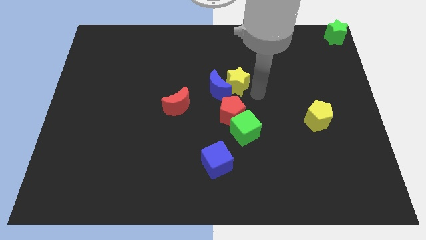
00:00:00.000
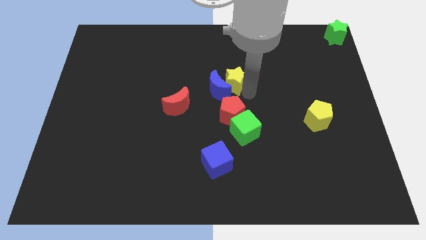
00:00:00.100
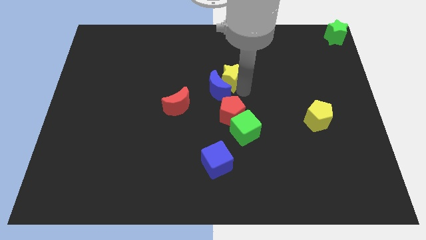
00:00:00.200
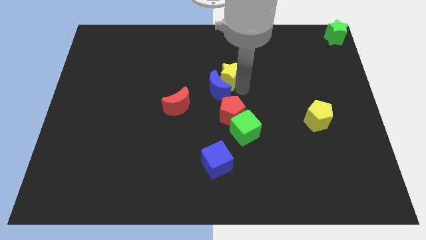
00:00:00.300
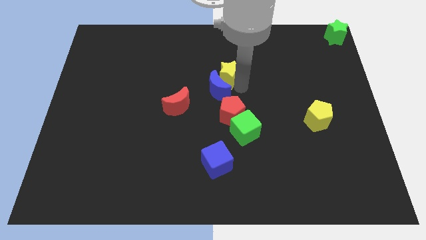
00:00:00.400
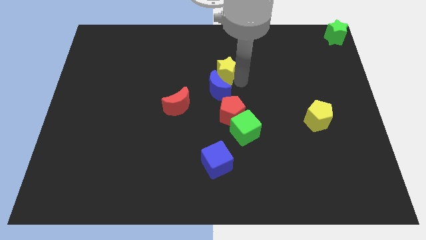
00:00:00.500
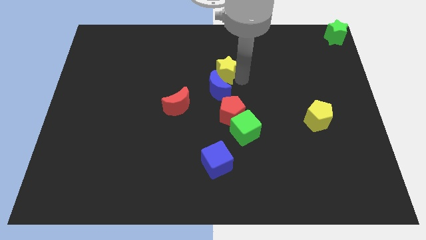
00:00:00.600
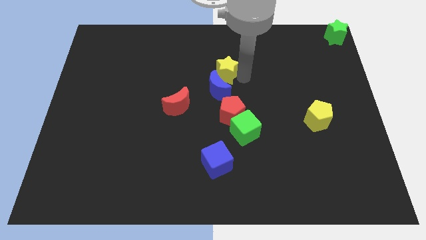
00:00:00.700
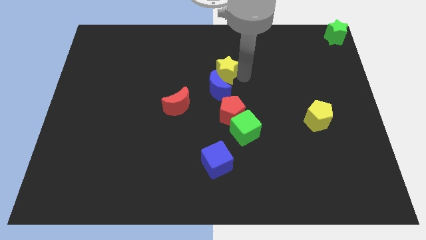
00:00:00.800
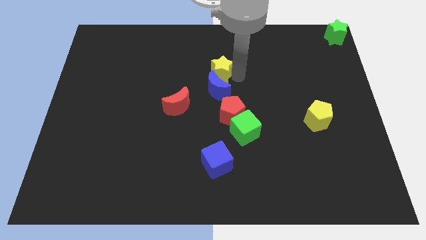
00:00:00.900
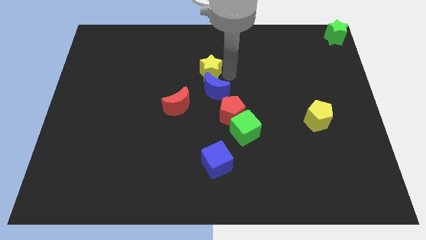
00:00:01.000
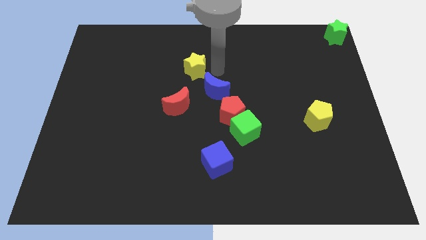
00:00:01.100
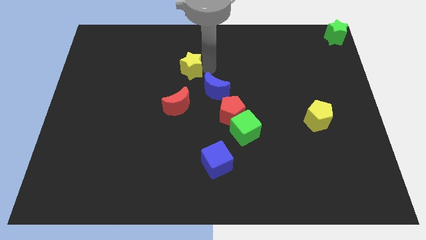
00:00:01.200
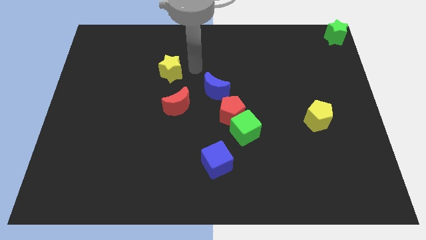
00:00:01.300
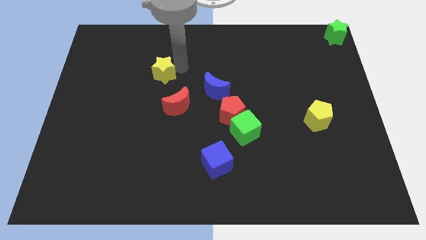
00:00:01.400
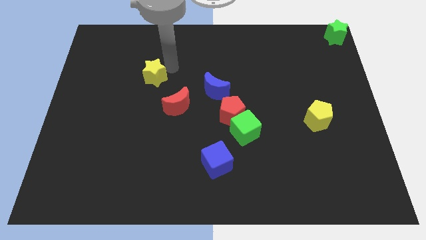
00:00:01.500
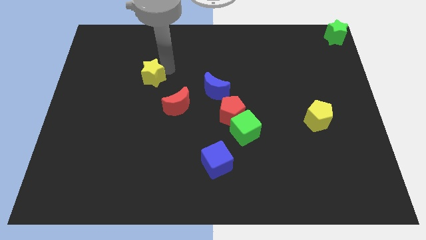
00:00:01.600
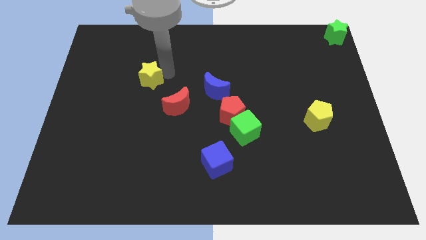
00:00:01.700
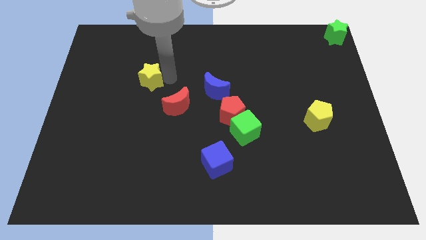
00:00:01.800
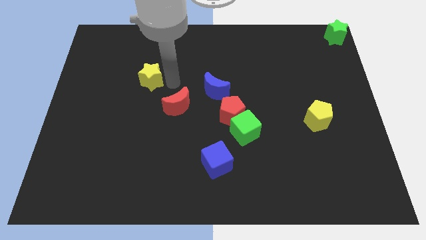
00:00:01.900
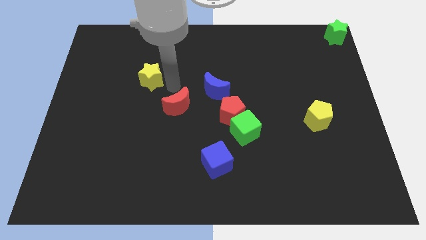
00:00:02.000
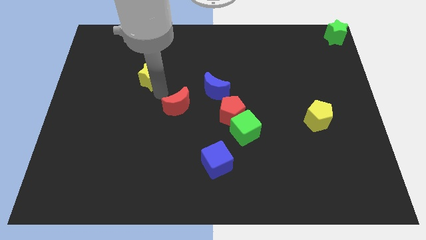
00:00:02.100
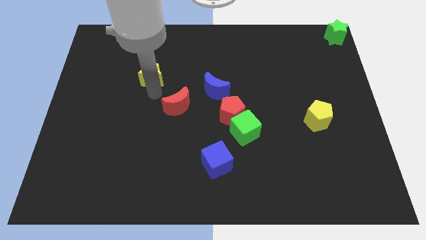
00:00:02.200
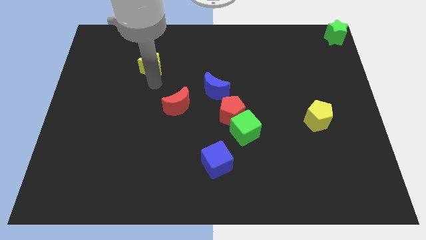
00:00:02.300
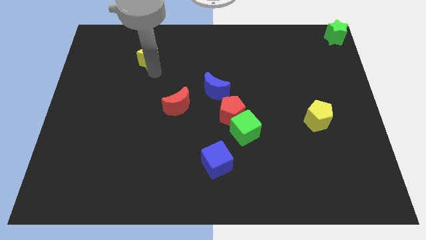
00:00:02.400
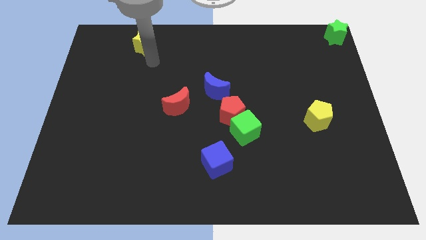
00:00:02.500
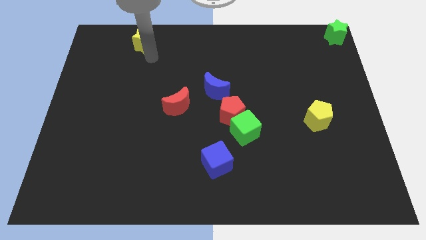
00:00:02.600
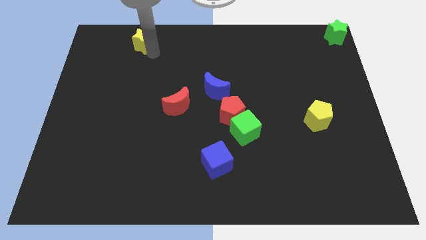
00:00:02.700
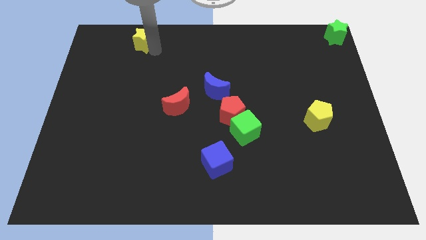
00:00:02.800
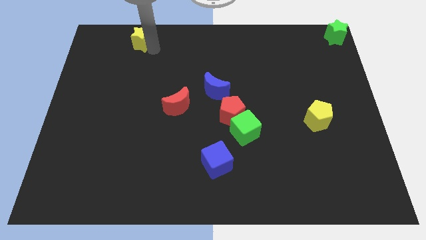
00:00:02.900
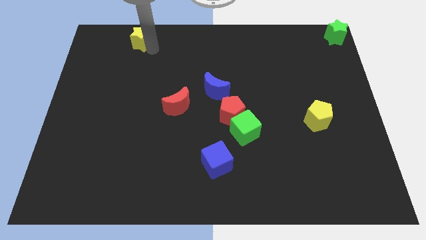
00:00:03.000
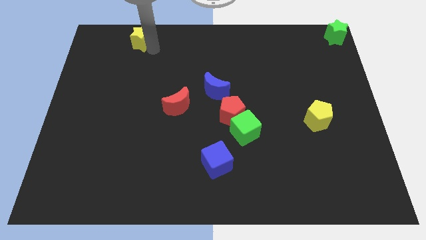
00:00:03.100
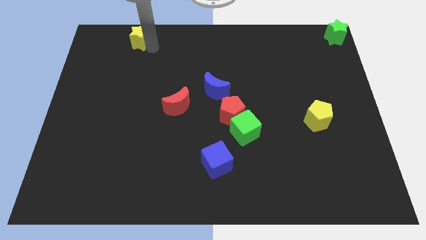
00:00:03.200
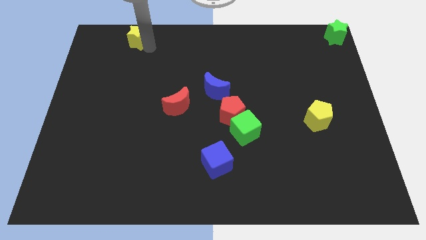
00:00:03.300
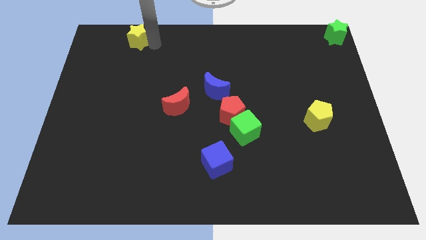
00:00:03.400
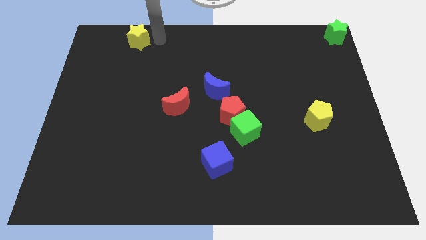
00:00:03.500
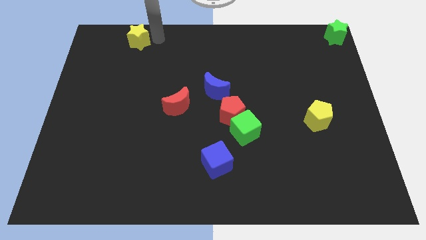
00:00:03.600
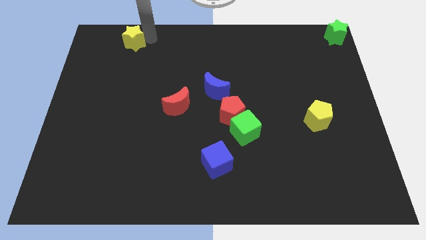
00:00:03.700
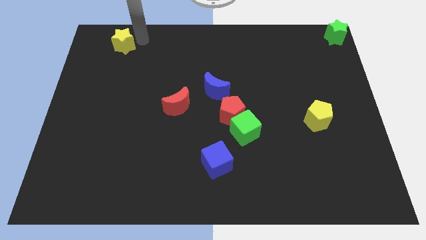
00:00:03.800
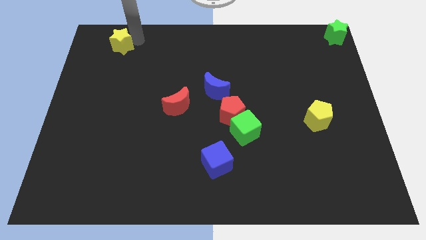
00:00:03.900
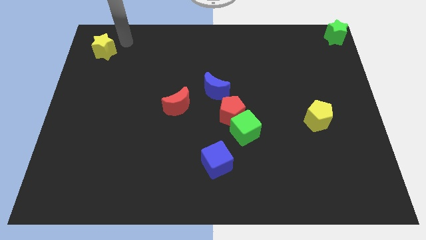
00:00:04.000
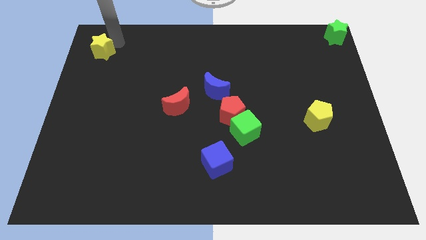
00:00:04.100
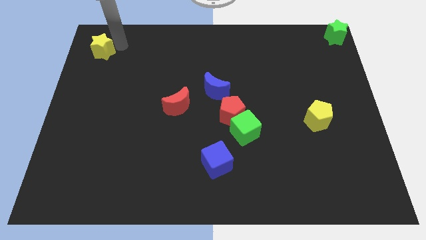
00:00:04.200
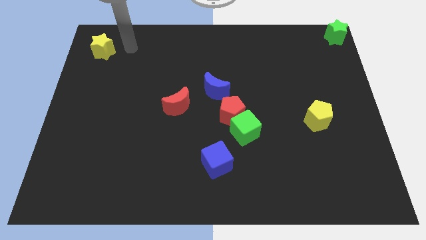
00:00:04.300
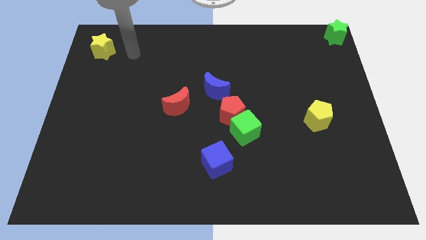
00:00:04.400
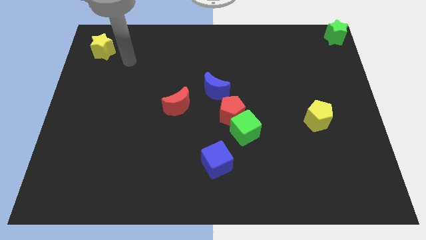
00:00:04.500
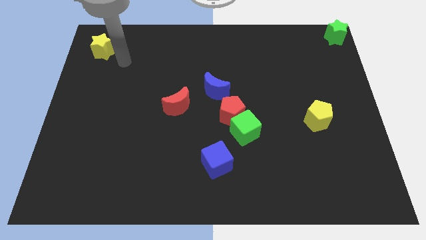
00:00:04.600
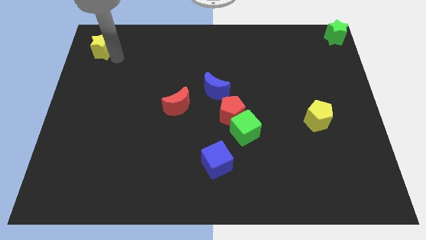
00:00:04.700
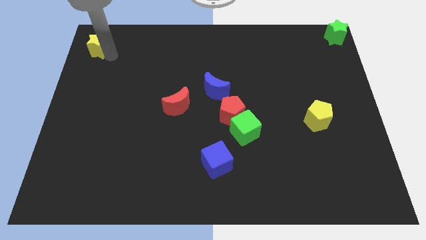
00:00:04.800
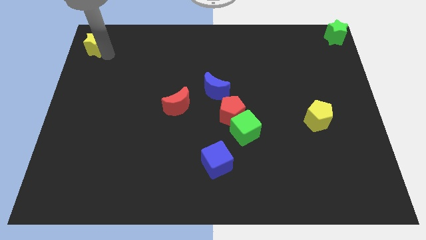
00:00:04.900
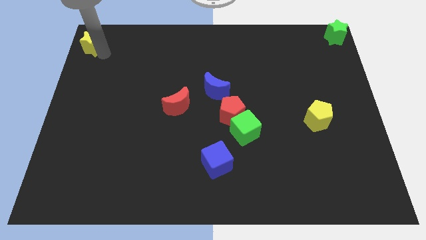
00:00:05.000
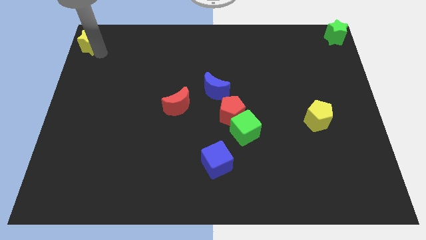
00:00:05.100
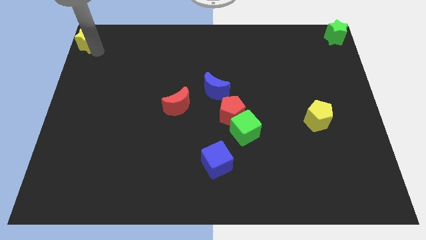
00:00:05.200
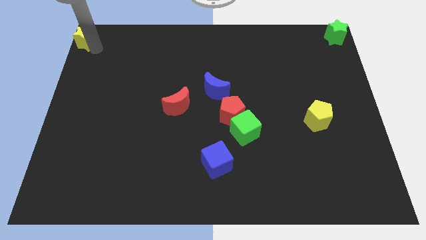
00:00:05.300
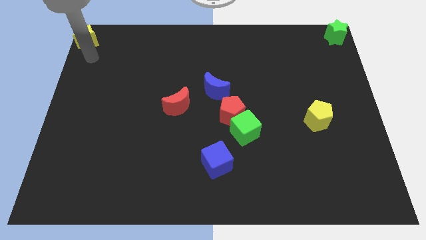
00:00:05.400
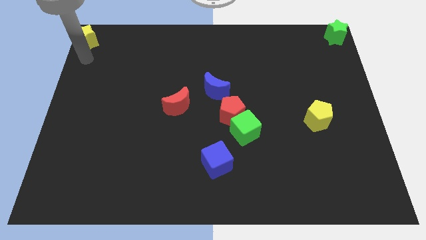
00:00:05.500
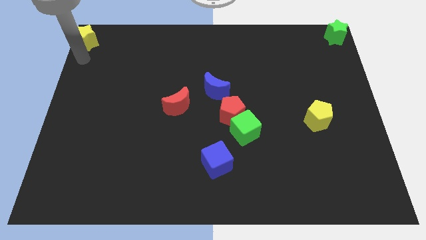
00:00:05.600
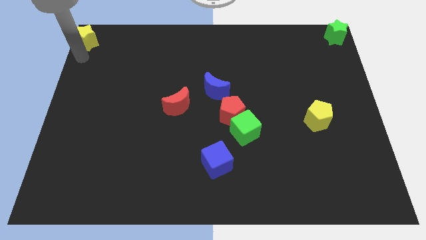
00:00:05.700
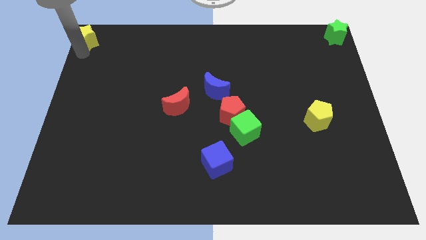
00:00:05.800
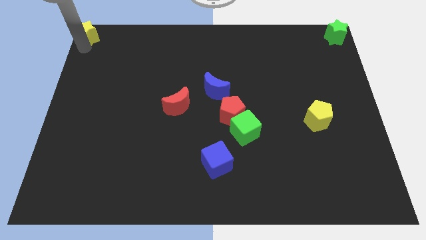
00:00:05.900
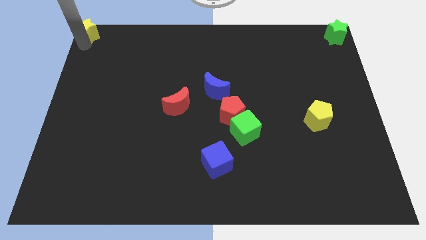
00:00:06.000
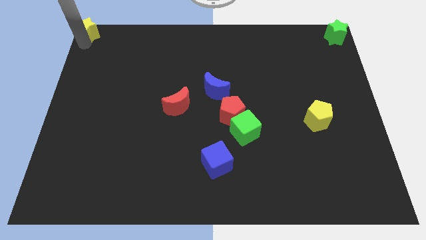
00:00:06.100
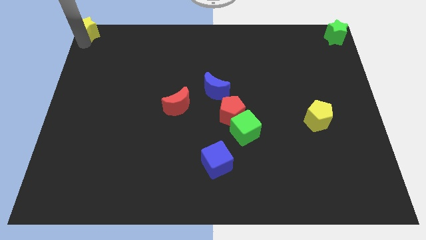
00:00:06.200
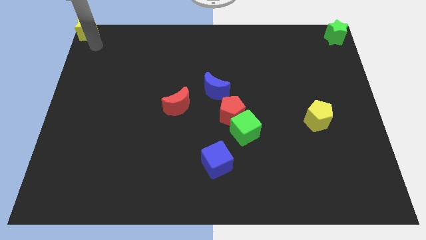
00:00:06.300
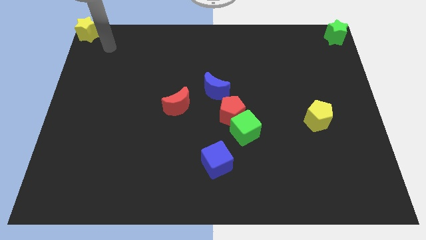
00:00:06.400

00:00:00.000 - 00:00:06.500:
drag the yellow star to the top left corner of the table

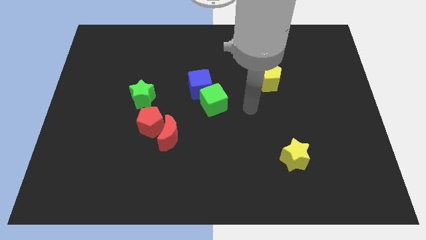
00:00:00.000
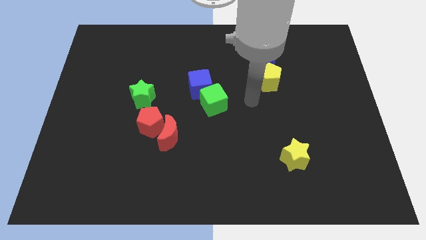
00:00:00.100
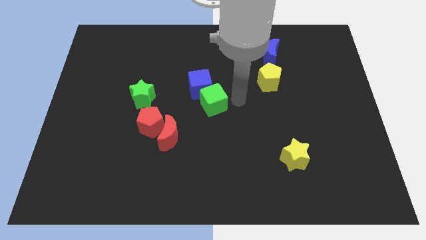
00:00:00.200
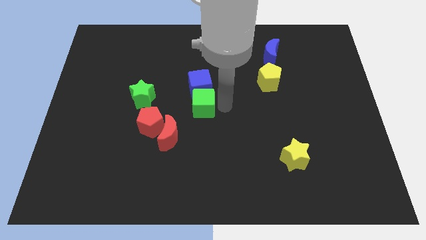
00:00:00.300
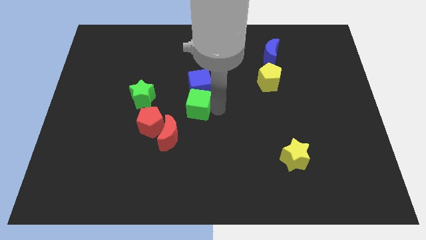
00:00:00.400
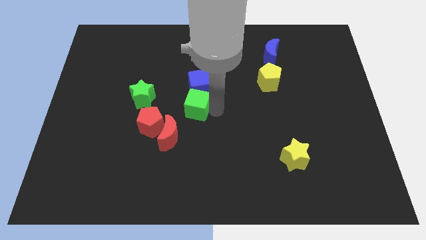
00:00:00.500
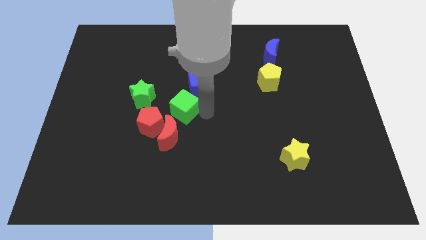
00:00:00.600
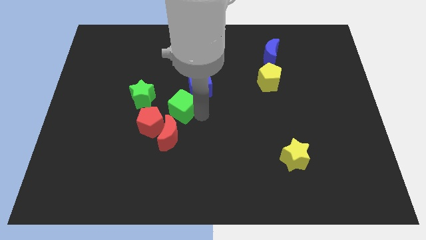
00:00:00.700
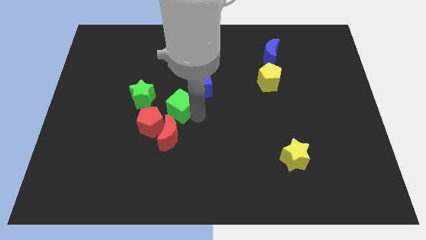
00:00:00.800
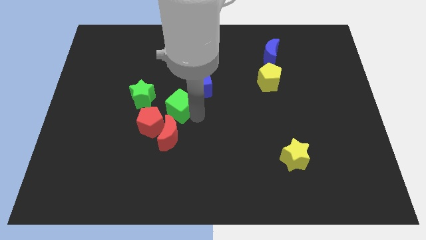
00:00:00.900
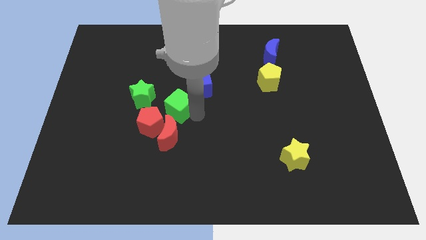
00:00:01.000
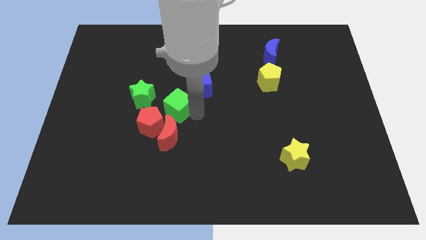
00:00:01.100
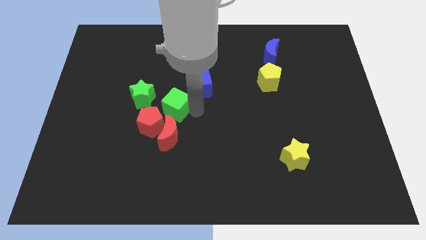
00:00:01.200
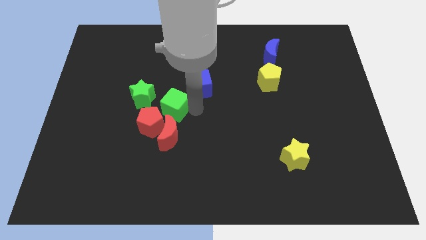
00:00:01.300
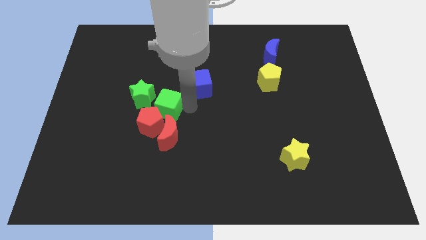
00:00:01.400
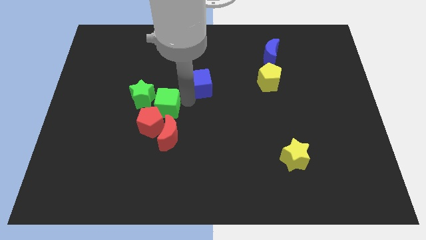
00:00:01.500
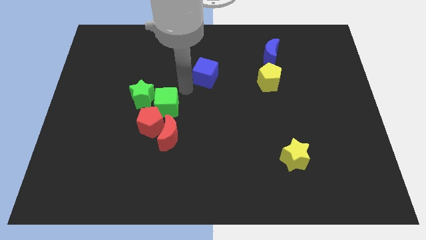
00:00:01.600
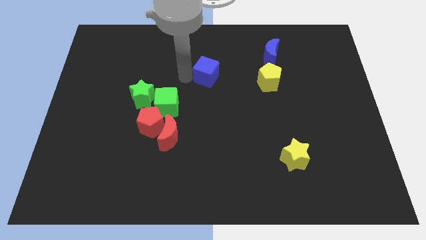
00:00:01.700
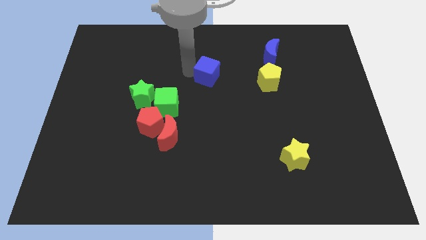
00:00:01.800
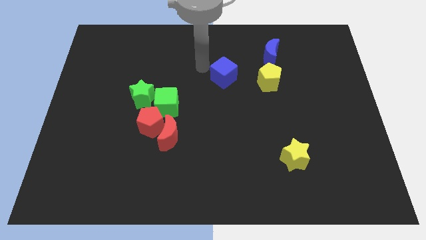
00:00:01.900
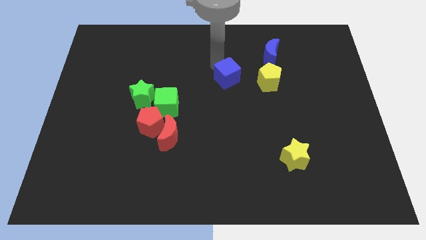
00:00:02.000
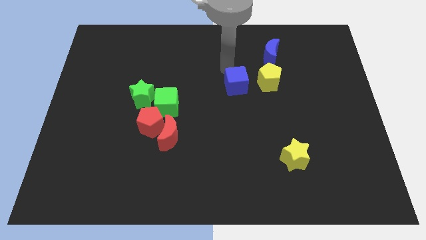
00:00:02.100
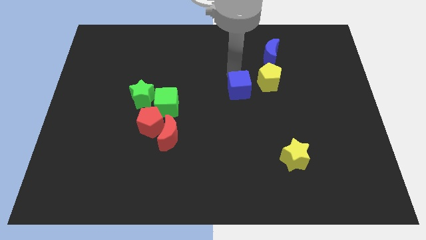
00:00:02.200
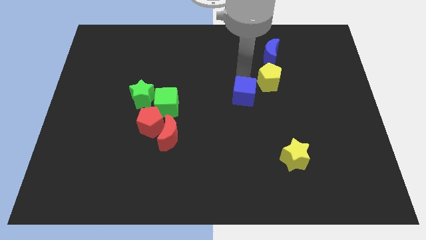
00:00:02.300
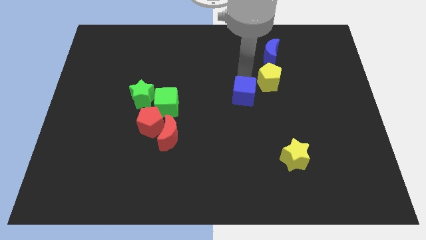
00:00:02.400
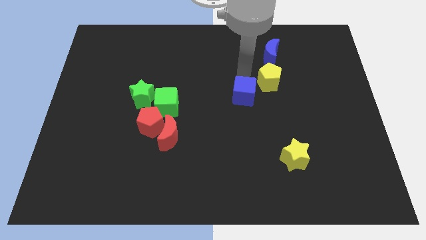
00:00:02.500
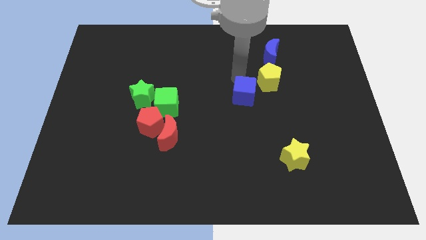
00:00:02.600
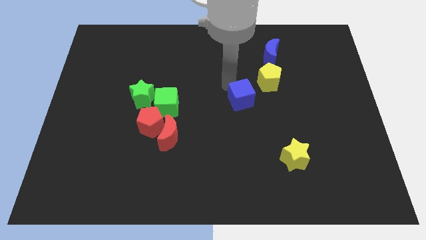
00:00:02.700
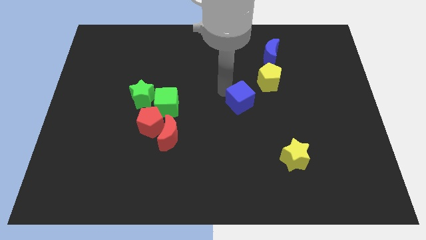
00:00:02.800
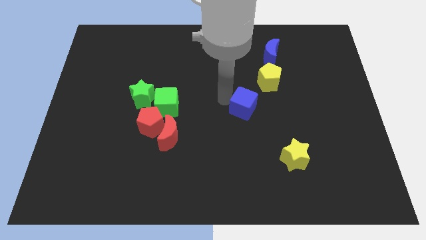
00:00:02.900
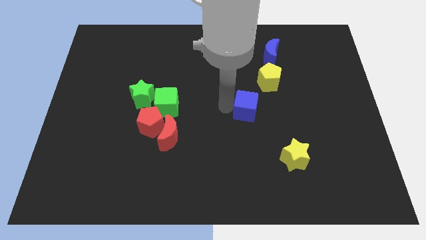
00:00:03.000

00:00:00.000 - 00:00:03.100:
separate blue and green cubes from each other
